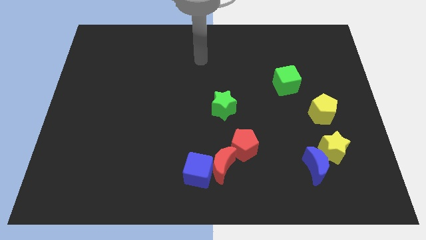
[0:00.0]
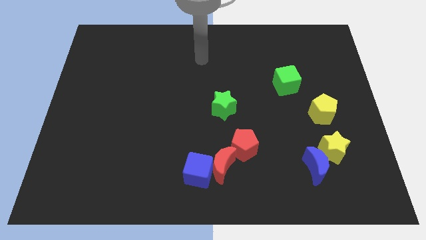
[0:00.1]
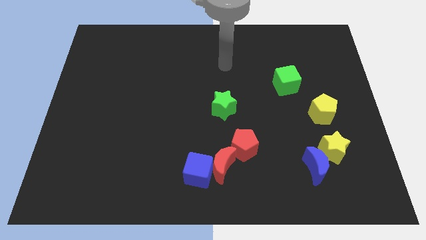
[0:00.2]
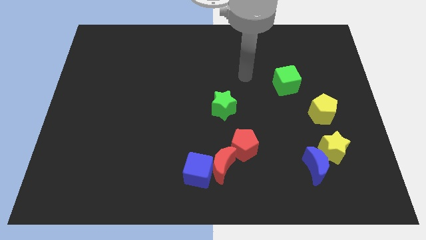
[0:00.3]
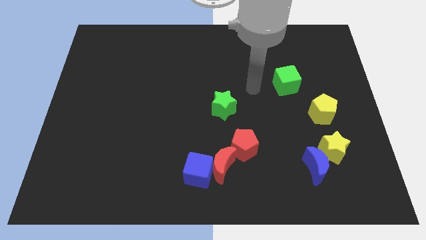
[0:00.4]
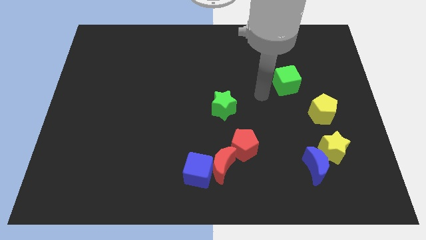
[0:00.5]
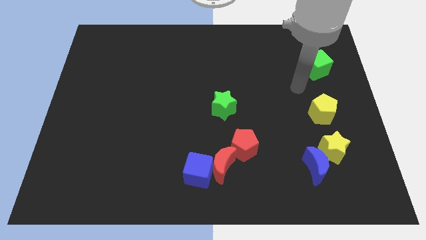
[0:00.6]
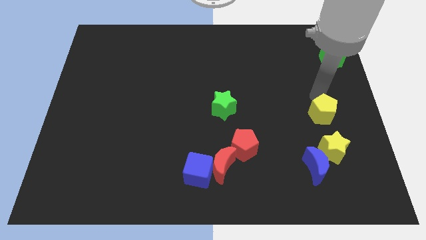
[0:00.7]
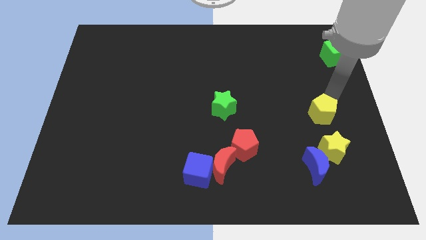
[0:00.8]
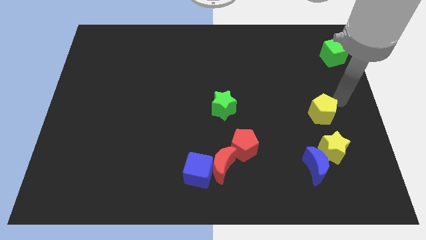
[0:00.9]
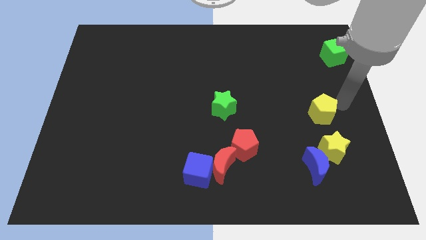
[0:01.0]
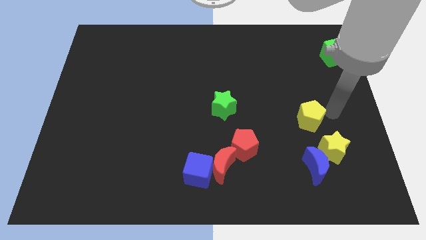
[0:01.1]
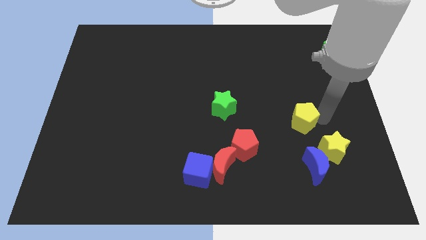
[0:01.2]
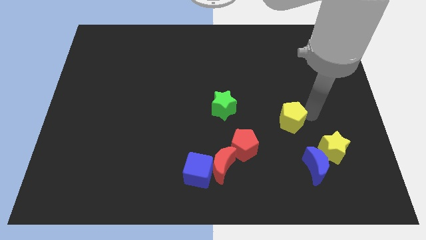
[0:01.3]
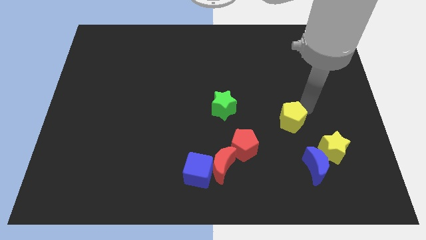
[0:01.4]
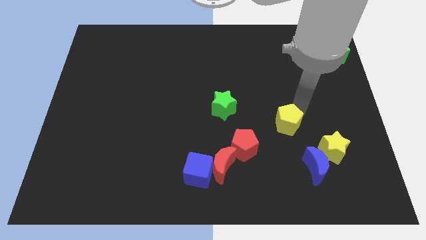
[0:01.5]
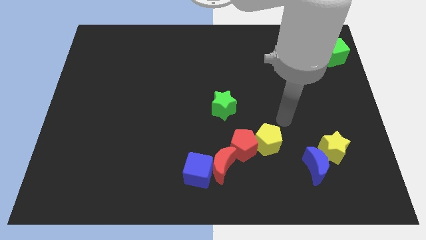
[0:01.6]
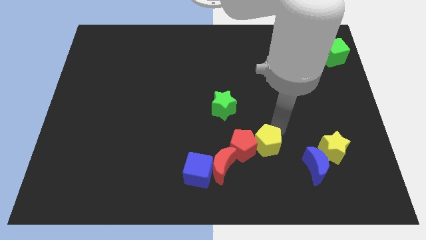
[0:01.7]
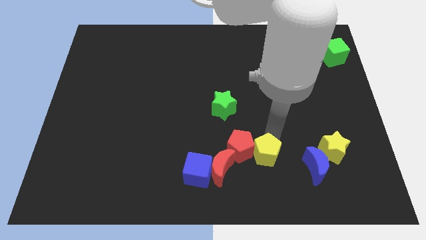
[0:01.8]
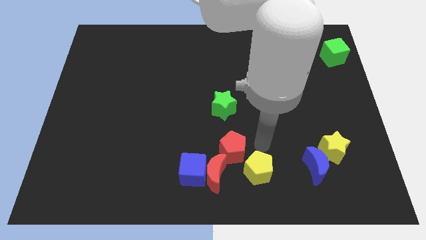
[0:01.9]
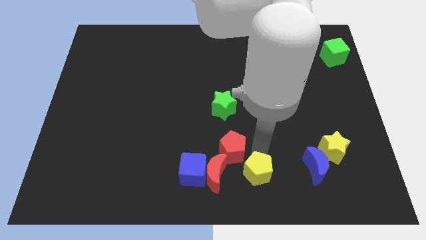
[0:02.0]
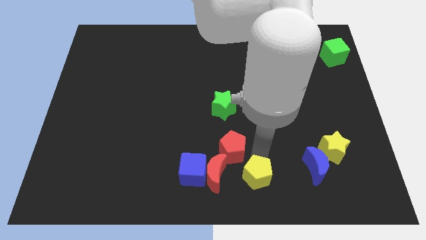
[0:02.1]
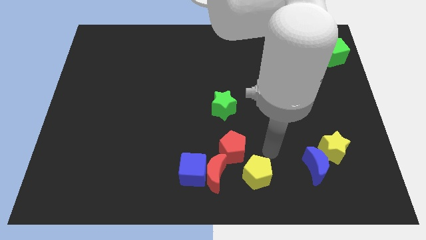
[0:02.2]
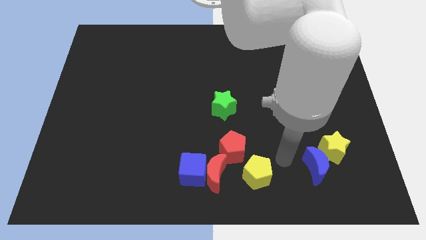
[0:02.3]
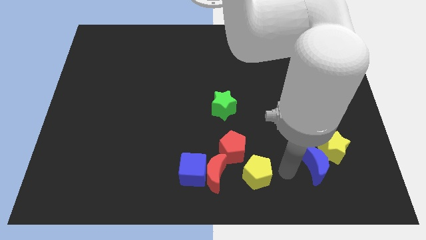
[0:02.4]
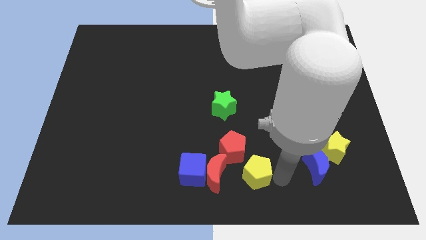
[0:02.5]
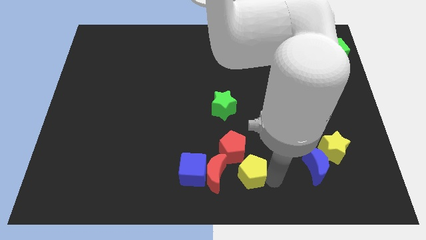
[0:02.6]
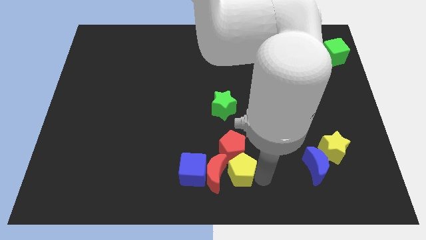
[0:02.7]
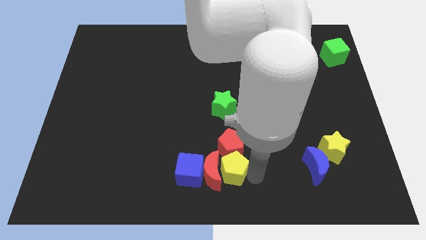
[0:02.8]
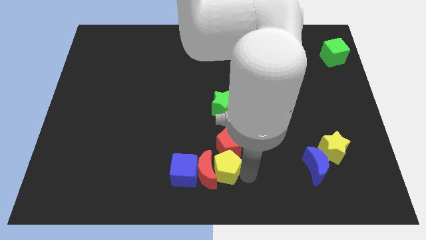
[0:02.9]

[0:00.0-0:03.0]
push the yellow pentagon towards the red moon

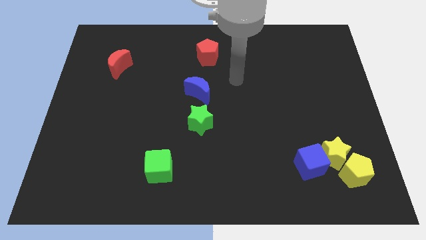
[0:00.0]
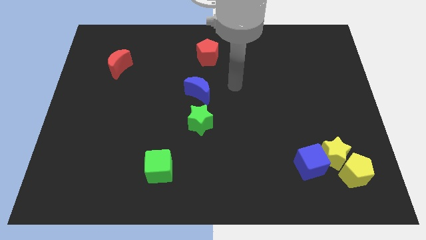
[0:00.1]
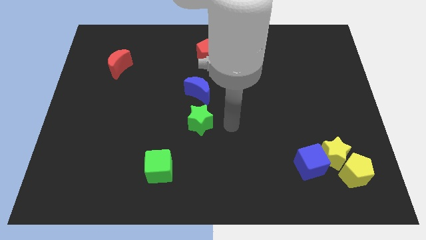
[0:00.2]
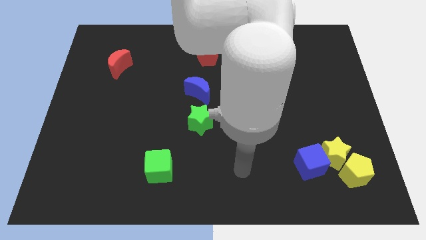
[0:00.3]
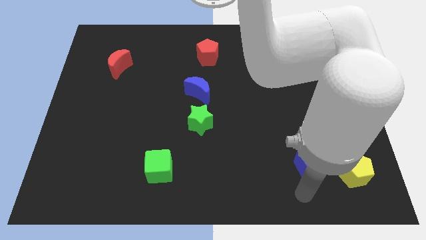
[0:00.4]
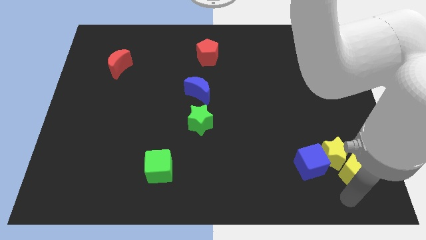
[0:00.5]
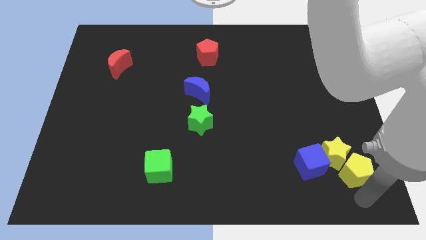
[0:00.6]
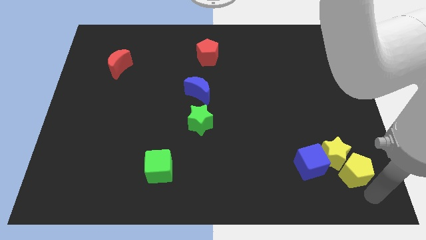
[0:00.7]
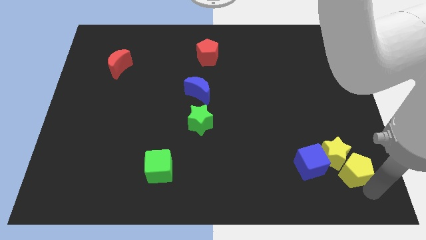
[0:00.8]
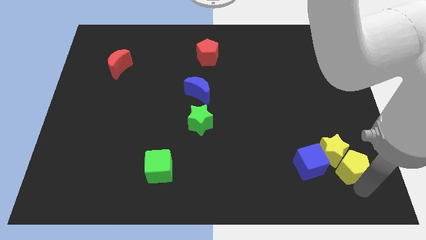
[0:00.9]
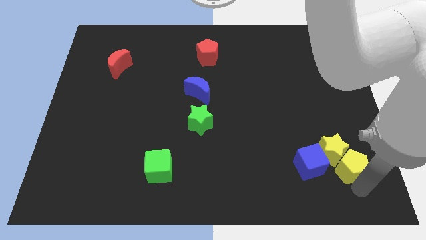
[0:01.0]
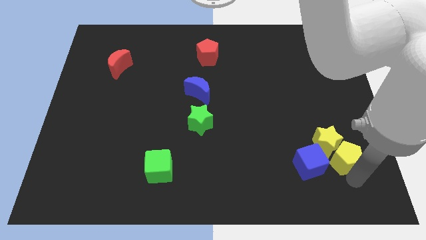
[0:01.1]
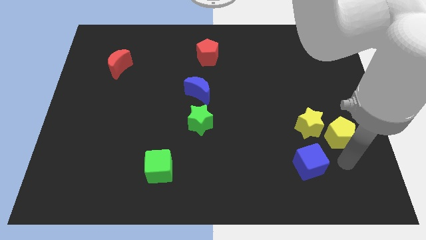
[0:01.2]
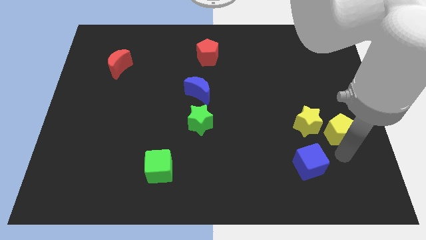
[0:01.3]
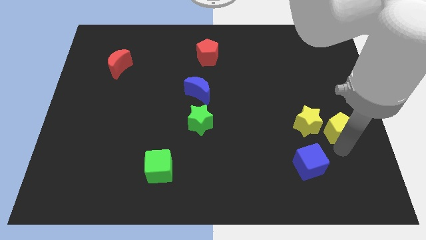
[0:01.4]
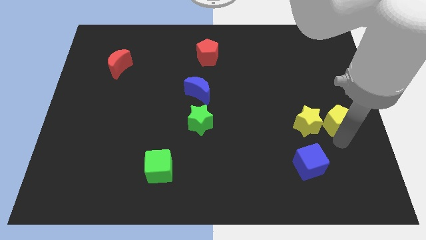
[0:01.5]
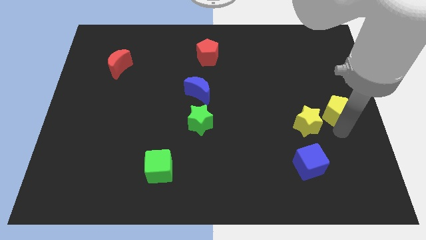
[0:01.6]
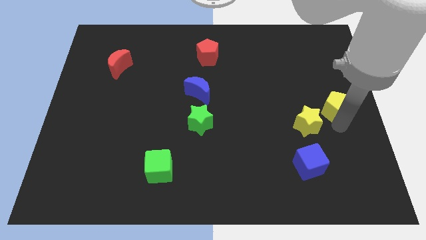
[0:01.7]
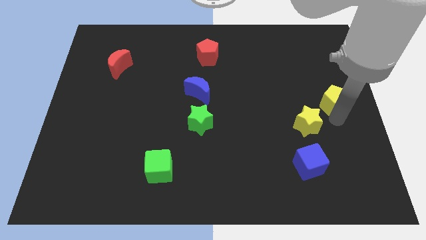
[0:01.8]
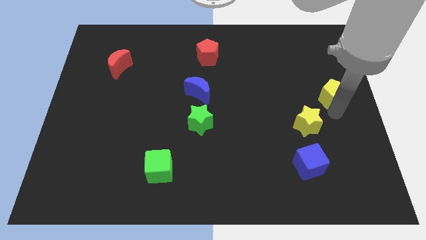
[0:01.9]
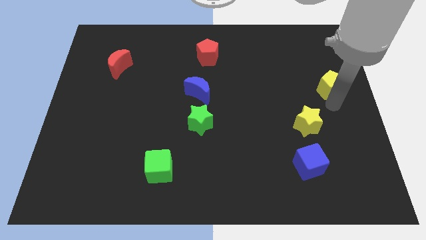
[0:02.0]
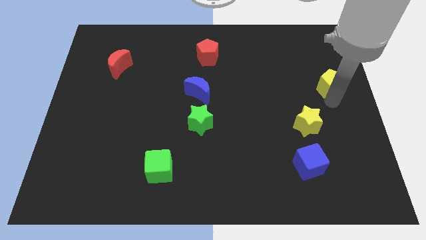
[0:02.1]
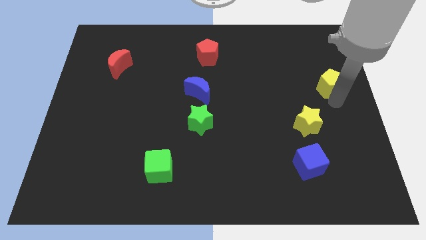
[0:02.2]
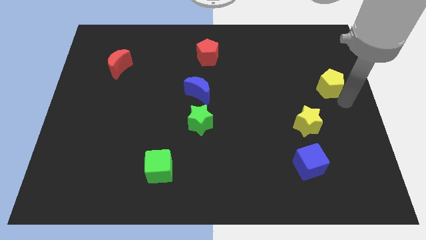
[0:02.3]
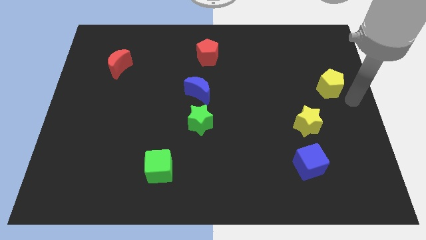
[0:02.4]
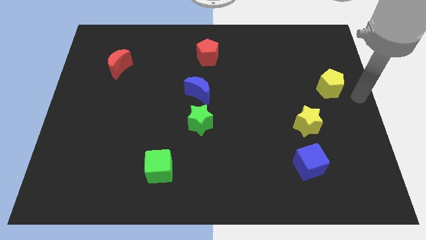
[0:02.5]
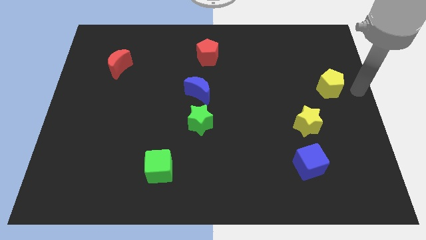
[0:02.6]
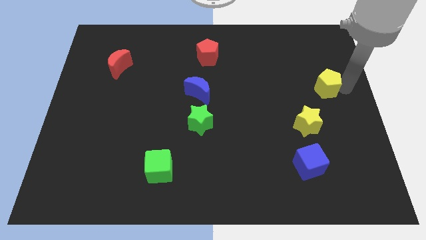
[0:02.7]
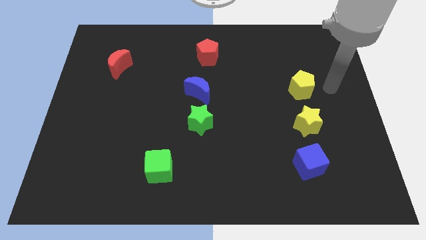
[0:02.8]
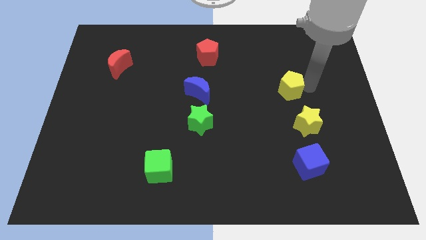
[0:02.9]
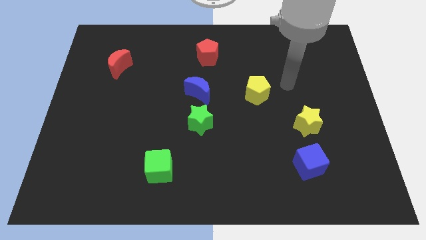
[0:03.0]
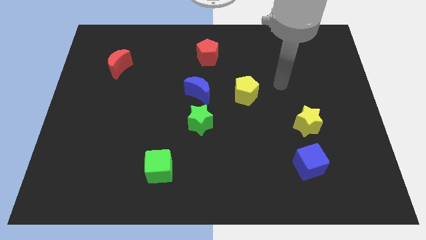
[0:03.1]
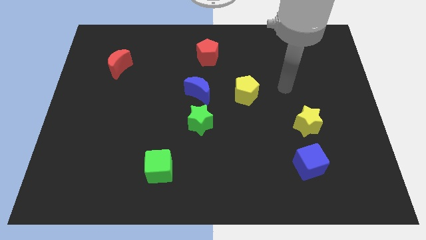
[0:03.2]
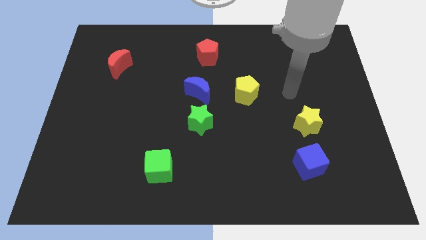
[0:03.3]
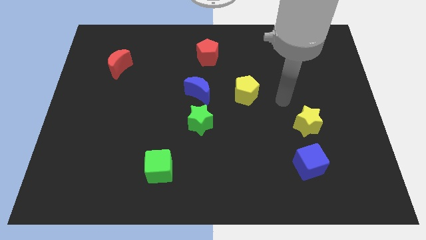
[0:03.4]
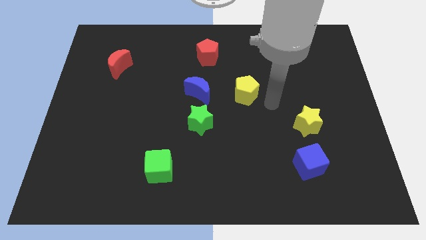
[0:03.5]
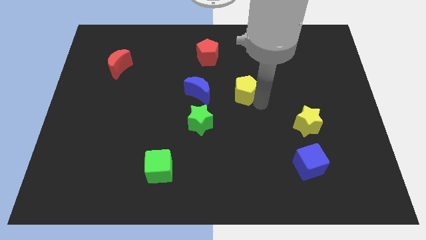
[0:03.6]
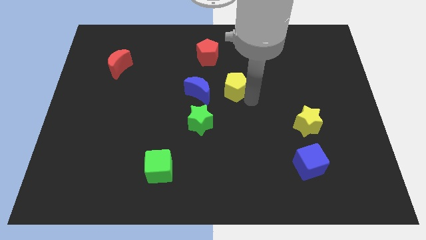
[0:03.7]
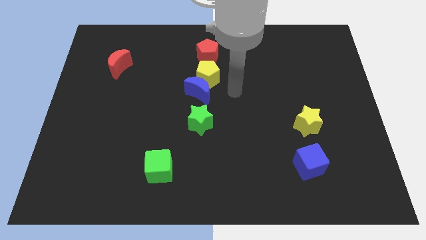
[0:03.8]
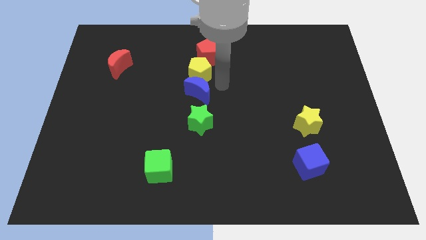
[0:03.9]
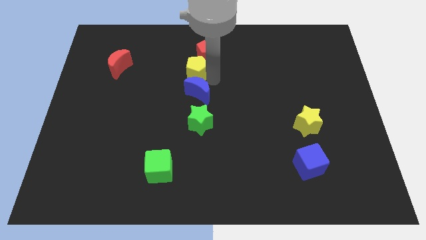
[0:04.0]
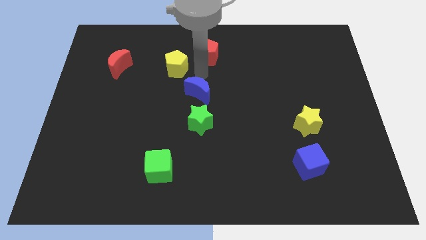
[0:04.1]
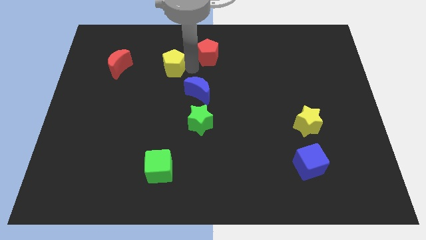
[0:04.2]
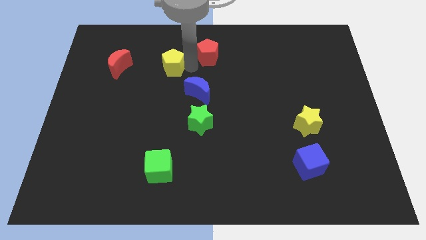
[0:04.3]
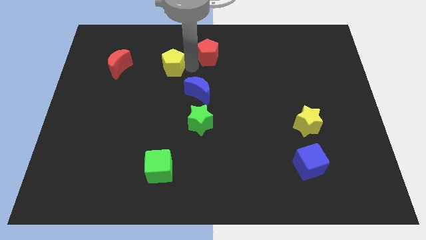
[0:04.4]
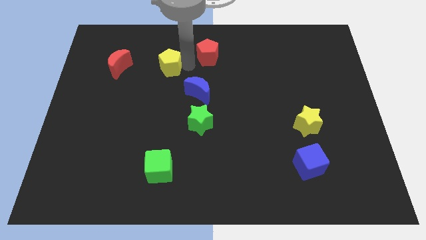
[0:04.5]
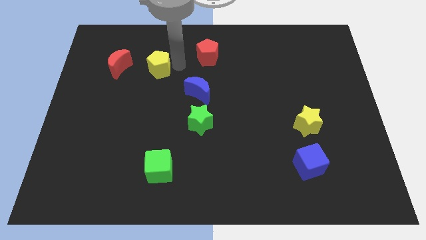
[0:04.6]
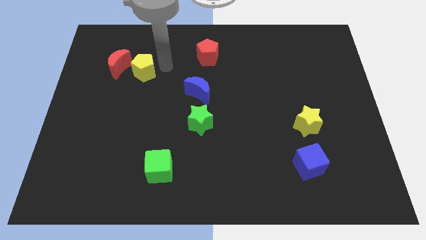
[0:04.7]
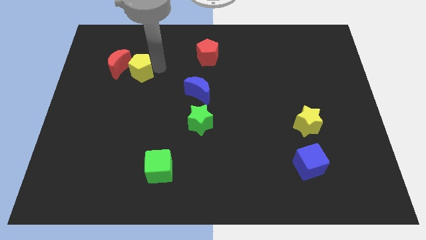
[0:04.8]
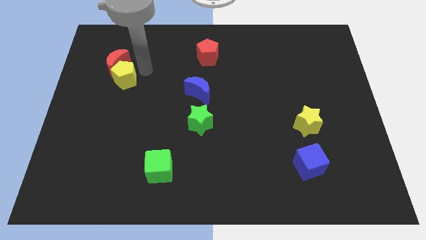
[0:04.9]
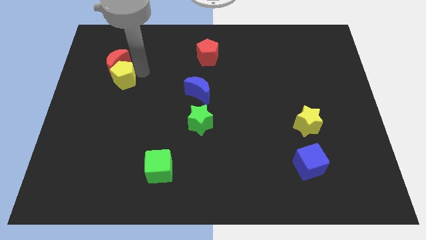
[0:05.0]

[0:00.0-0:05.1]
move the yellow pentagon next to the red moon

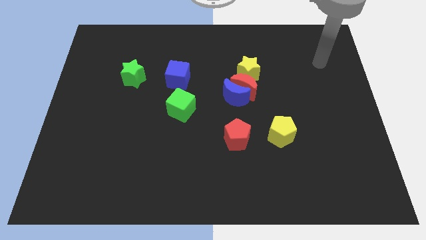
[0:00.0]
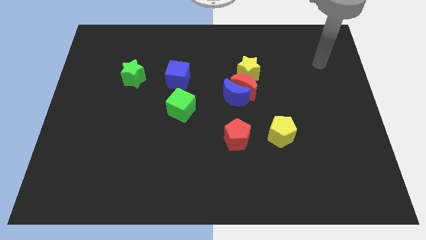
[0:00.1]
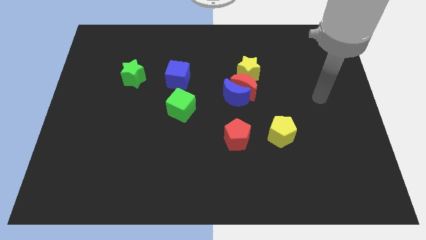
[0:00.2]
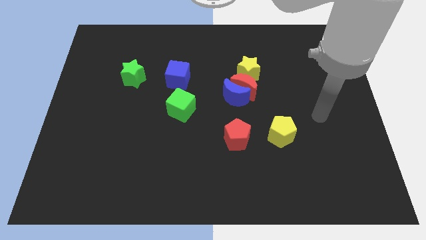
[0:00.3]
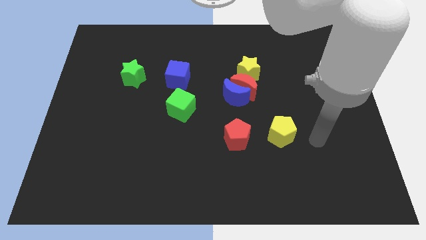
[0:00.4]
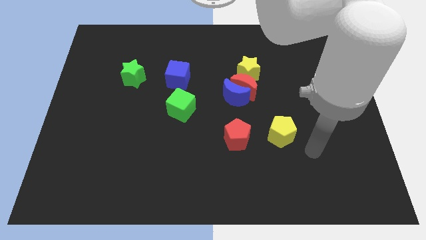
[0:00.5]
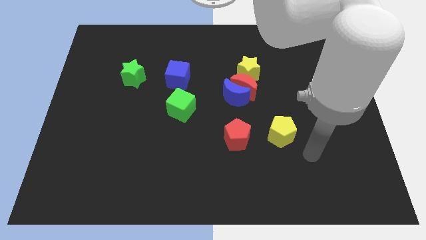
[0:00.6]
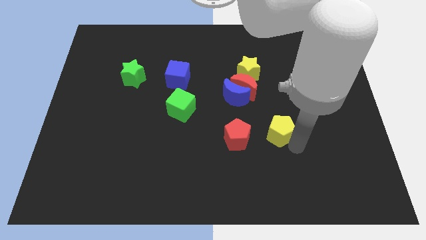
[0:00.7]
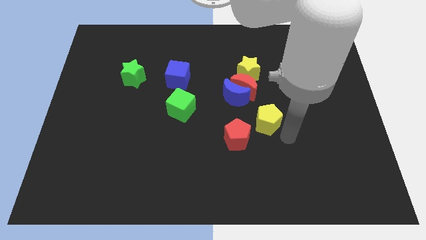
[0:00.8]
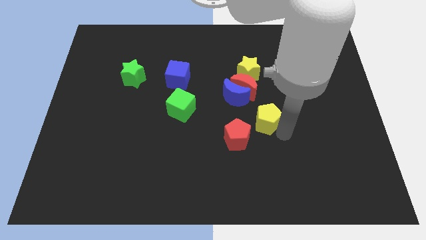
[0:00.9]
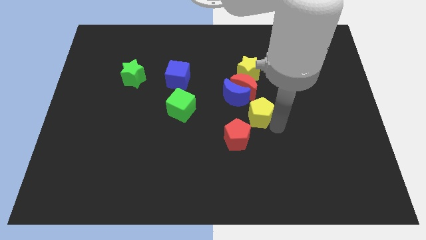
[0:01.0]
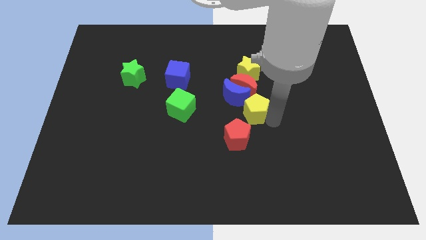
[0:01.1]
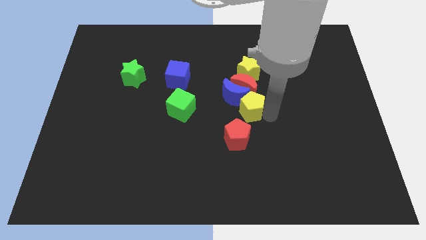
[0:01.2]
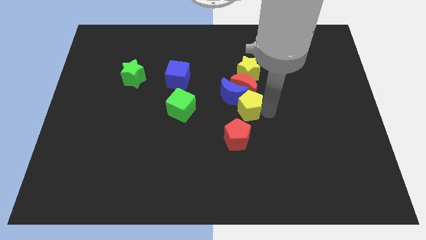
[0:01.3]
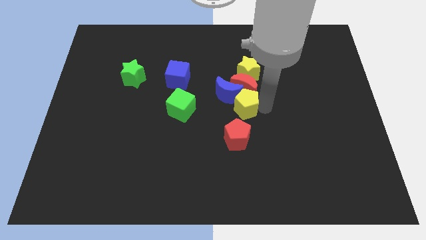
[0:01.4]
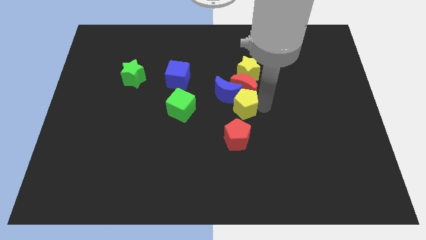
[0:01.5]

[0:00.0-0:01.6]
put the yellow pentagon next to the red moon
